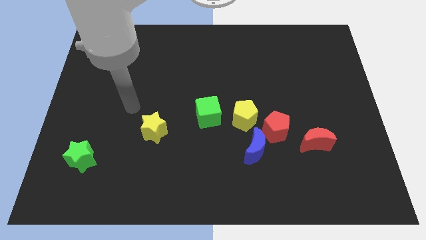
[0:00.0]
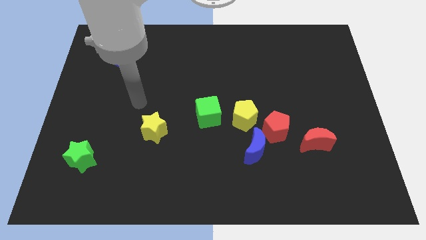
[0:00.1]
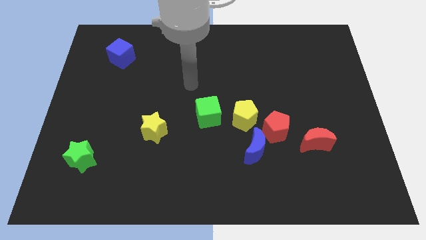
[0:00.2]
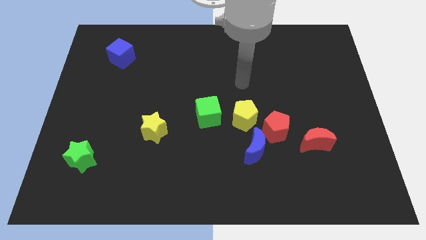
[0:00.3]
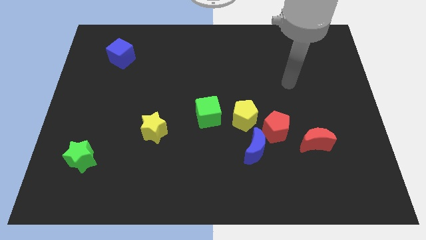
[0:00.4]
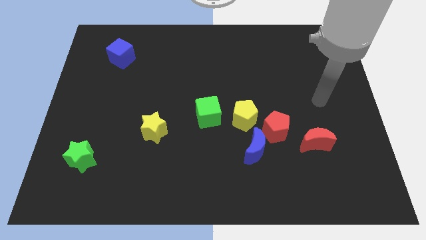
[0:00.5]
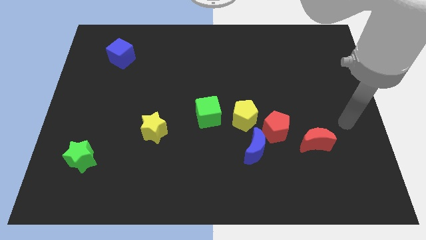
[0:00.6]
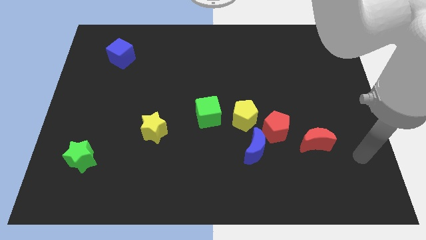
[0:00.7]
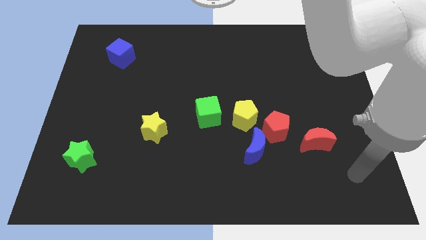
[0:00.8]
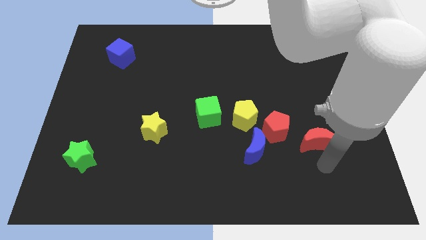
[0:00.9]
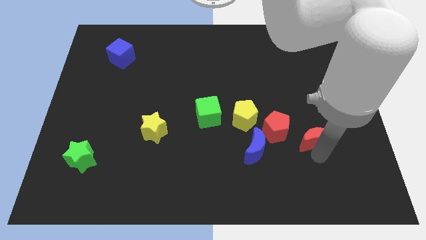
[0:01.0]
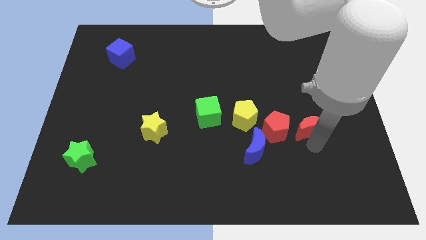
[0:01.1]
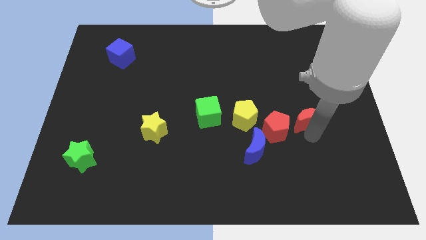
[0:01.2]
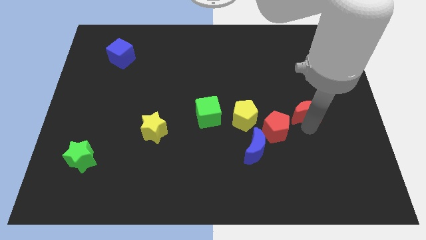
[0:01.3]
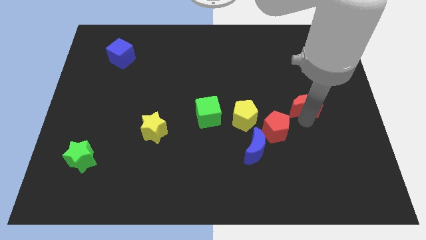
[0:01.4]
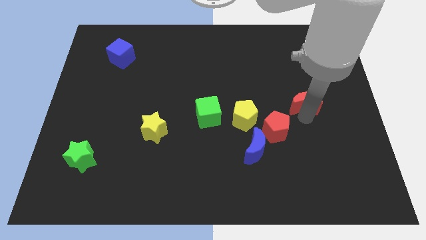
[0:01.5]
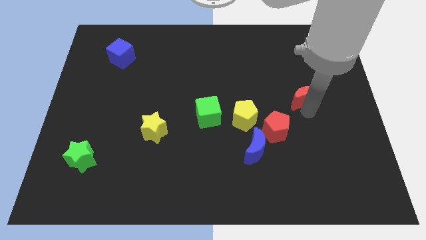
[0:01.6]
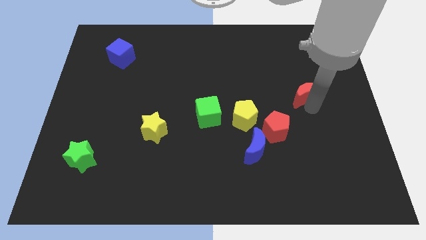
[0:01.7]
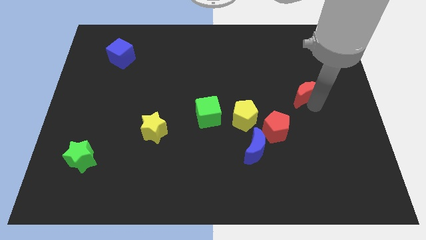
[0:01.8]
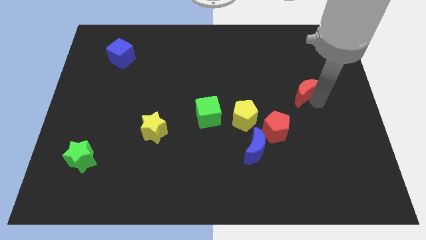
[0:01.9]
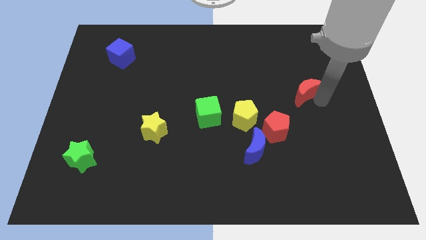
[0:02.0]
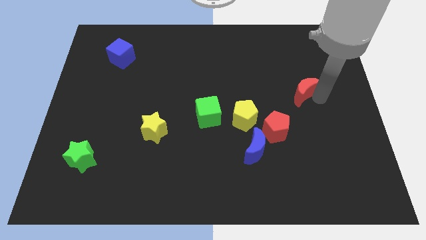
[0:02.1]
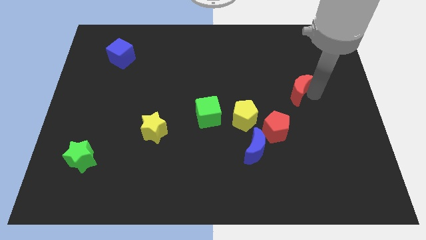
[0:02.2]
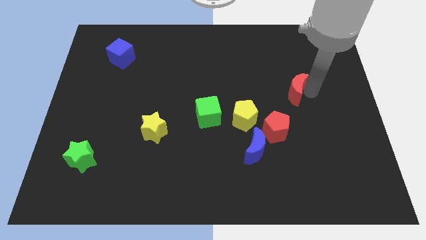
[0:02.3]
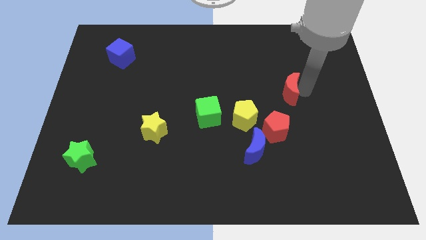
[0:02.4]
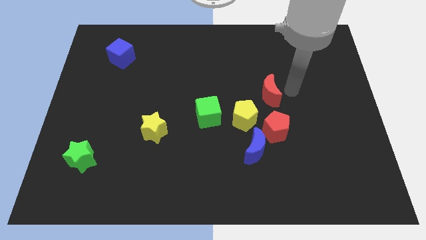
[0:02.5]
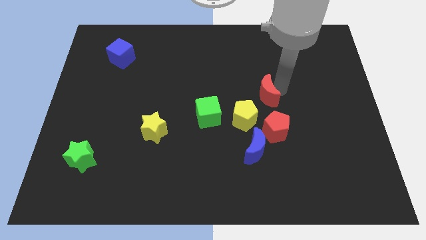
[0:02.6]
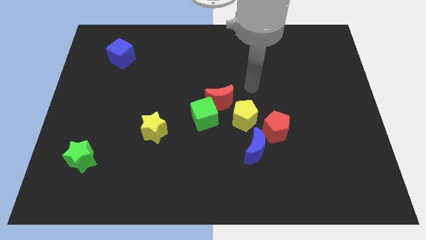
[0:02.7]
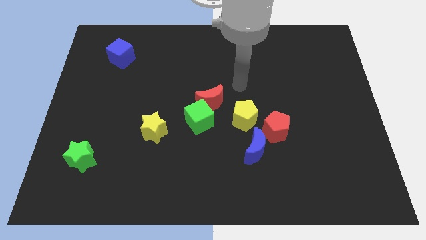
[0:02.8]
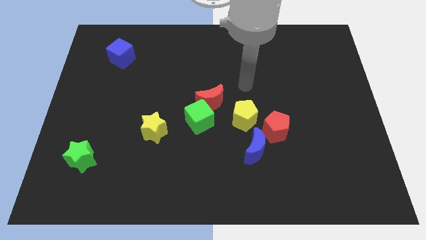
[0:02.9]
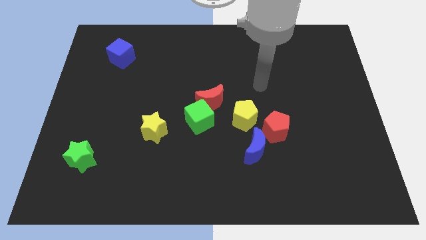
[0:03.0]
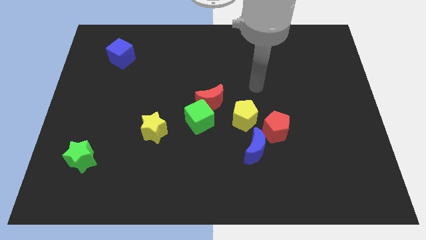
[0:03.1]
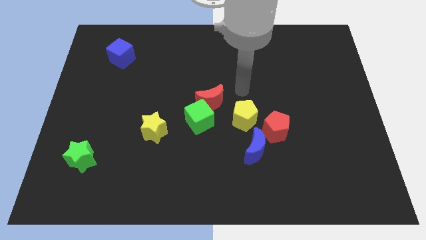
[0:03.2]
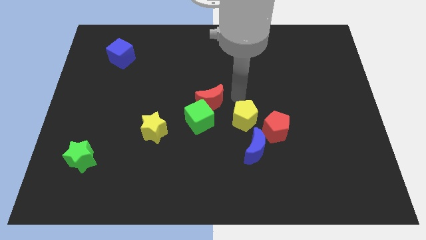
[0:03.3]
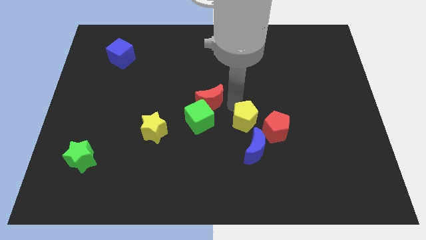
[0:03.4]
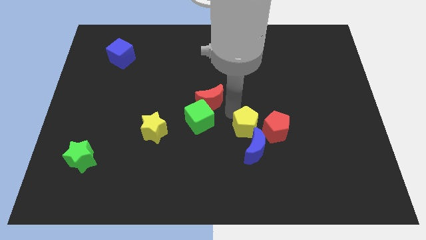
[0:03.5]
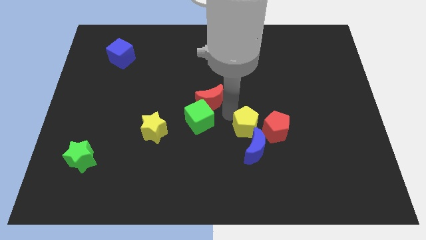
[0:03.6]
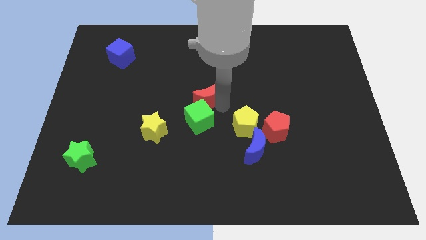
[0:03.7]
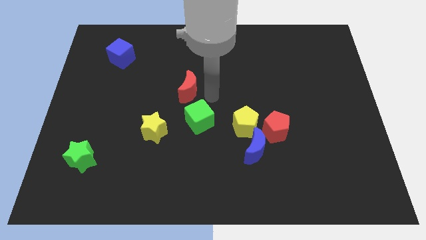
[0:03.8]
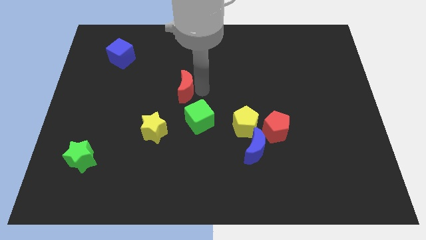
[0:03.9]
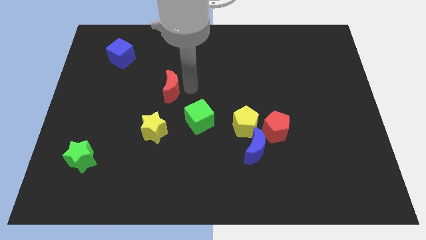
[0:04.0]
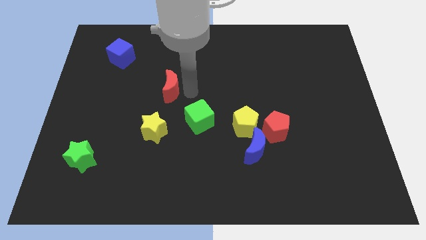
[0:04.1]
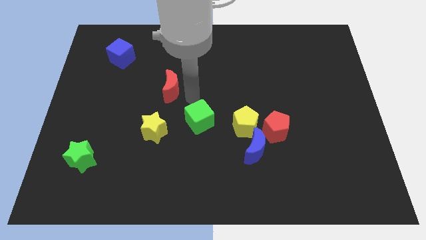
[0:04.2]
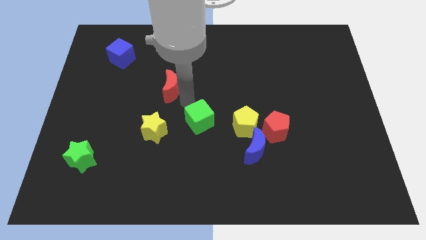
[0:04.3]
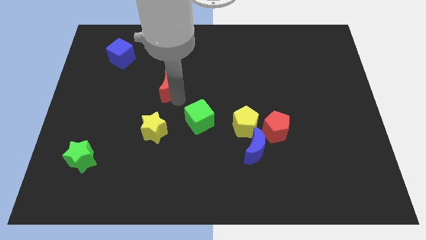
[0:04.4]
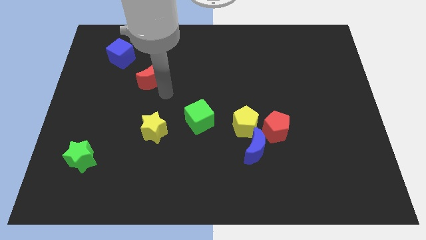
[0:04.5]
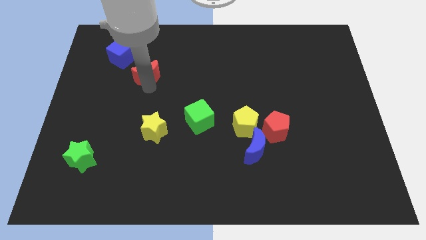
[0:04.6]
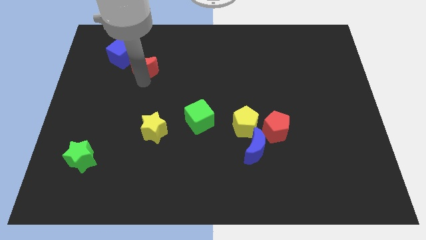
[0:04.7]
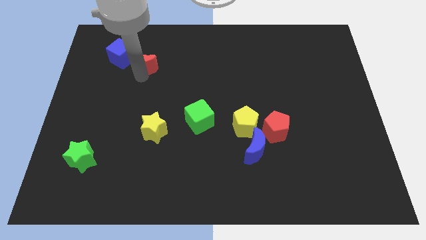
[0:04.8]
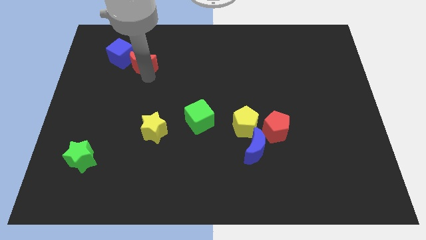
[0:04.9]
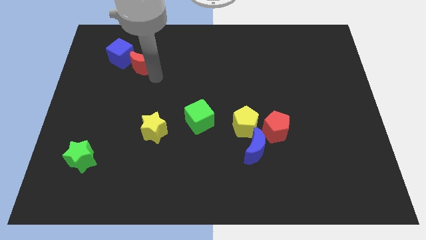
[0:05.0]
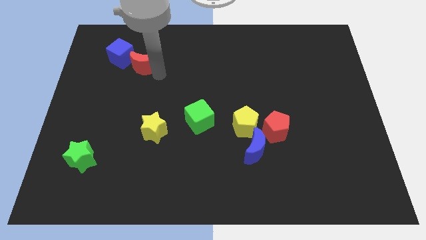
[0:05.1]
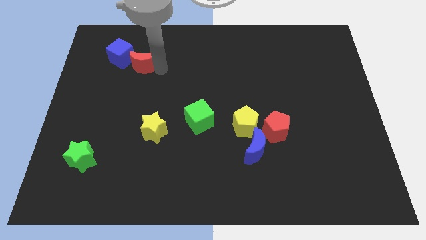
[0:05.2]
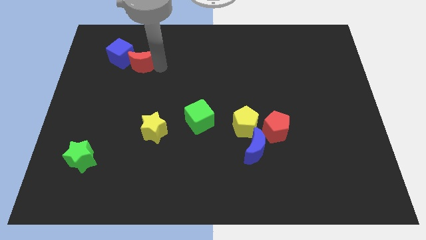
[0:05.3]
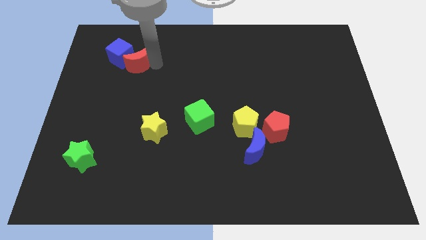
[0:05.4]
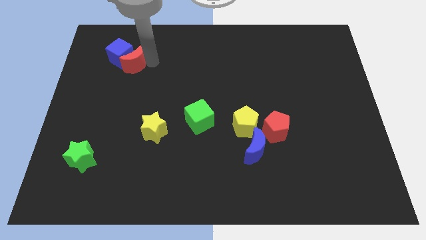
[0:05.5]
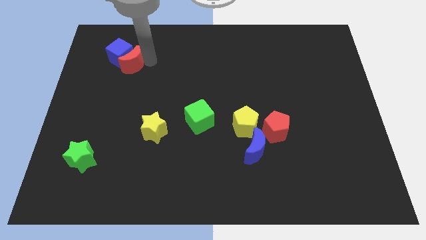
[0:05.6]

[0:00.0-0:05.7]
slide the red moon to the blue cube

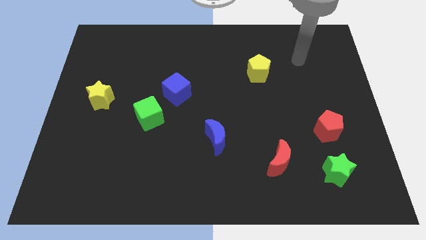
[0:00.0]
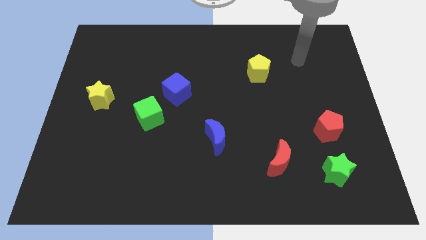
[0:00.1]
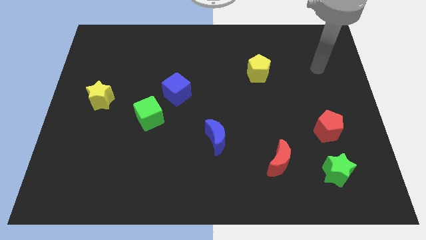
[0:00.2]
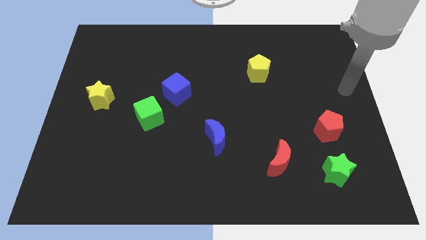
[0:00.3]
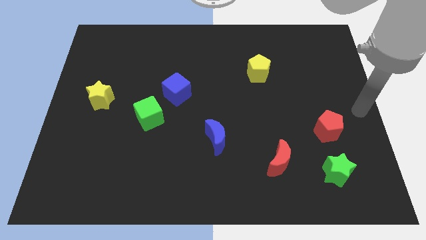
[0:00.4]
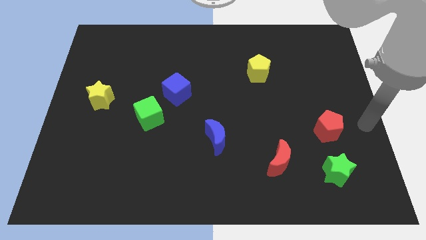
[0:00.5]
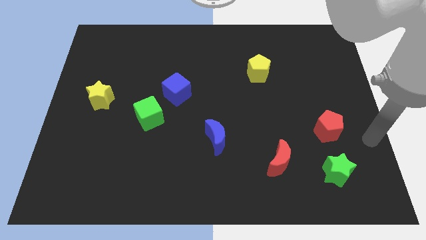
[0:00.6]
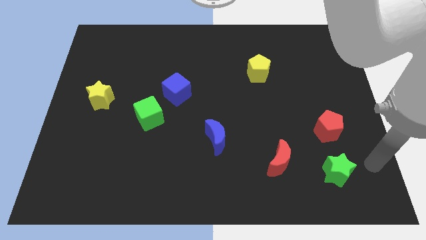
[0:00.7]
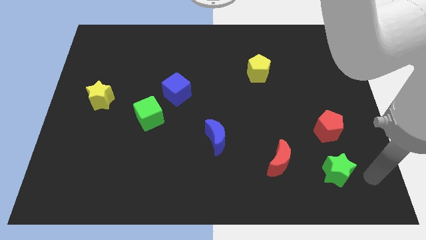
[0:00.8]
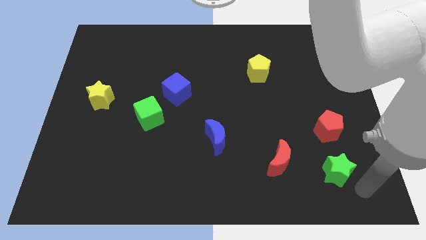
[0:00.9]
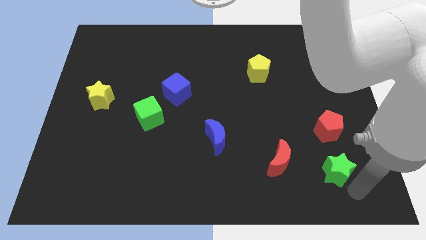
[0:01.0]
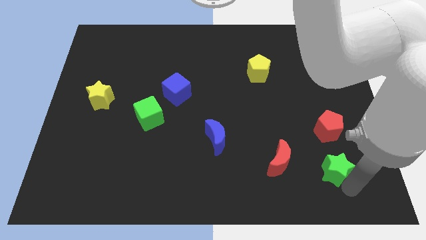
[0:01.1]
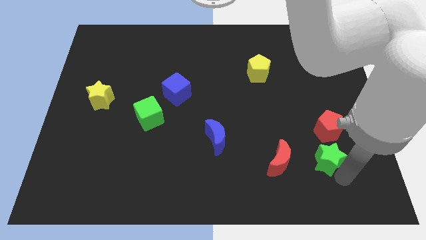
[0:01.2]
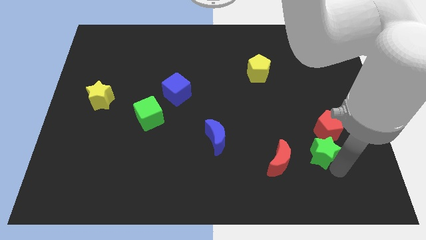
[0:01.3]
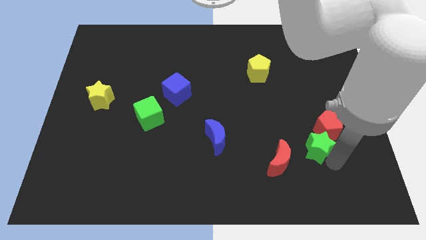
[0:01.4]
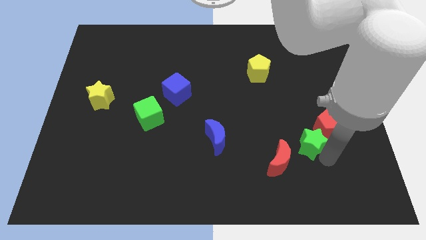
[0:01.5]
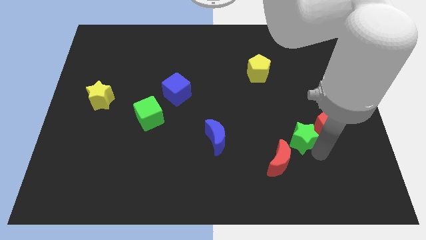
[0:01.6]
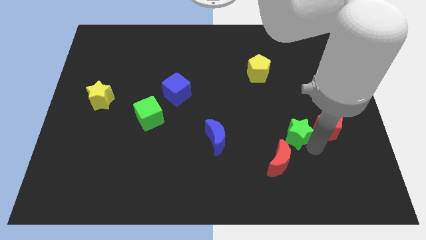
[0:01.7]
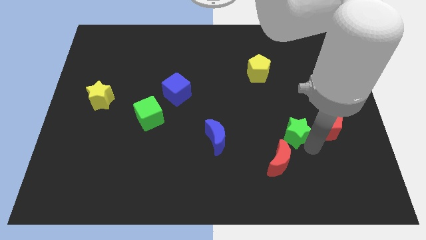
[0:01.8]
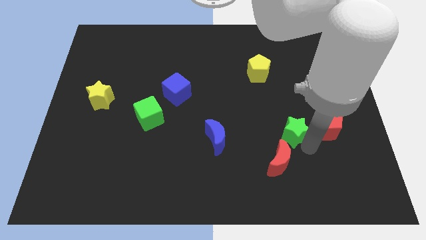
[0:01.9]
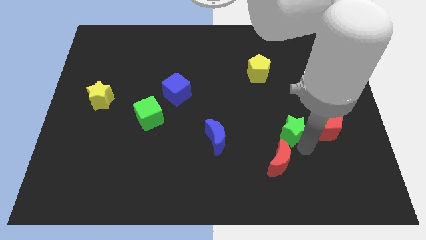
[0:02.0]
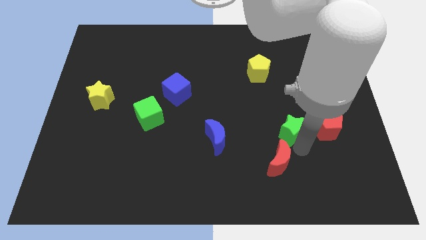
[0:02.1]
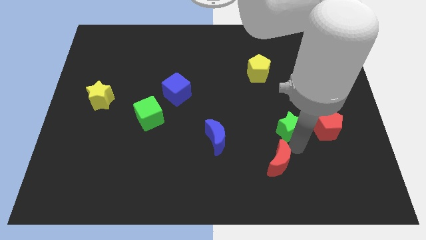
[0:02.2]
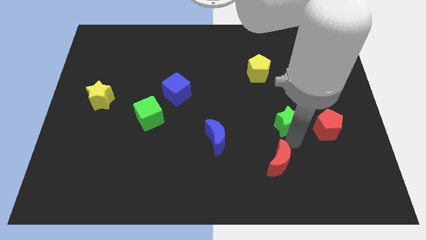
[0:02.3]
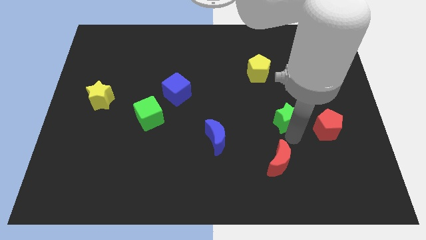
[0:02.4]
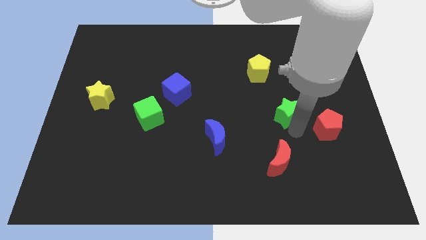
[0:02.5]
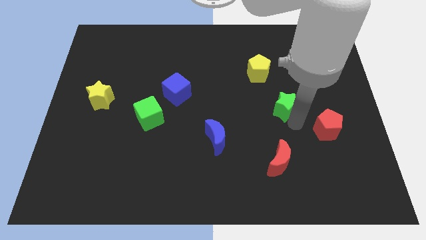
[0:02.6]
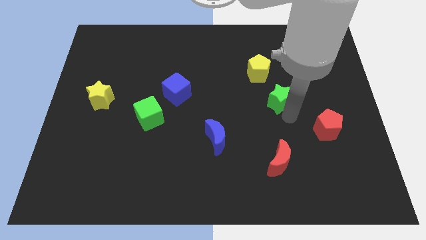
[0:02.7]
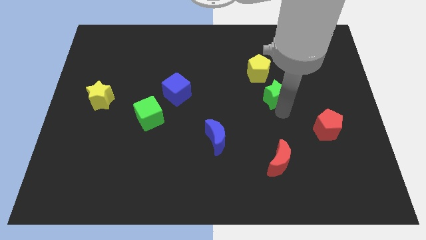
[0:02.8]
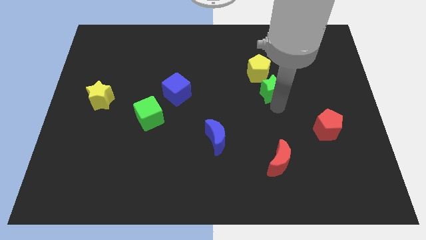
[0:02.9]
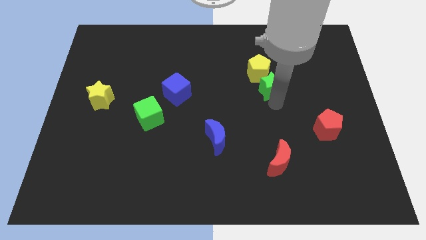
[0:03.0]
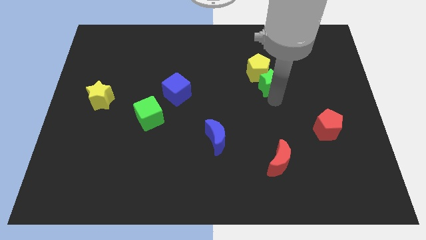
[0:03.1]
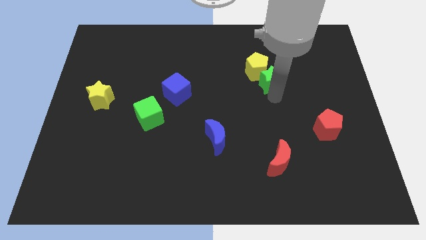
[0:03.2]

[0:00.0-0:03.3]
push the green star to the yellow pentagon
